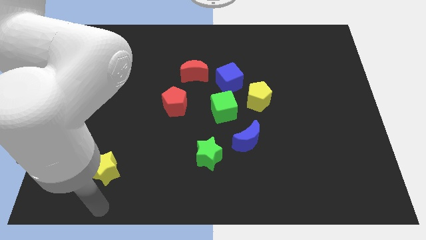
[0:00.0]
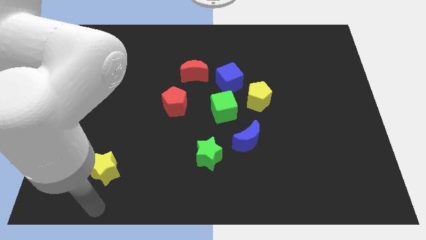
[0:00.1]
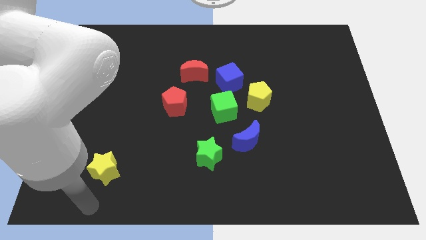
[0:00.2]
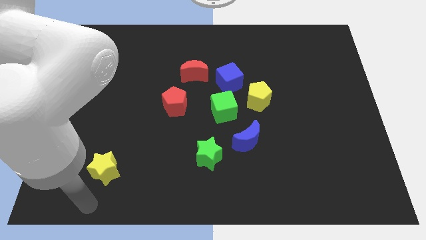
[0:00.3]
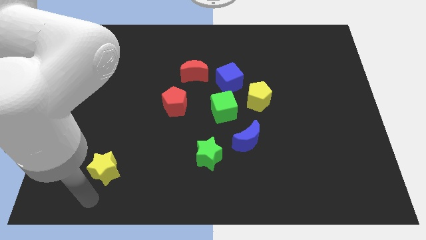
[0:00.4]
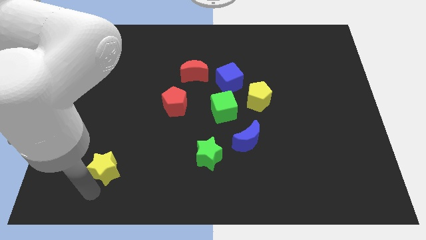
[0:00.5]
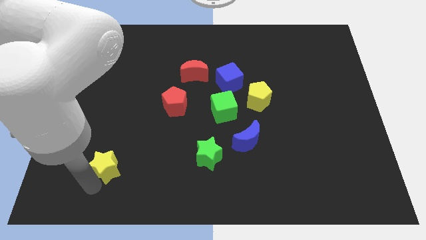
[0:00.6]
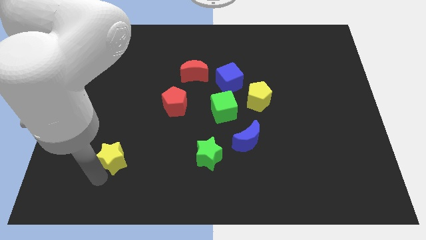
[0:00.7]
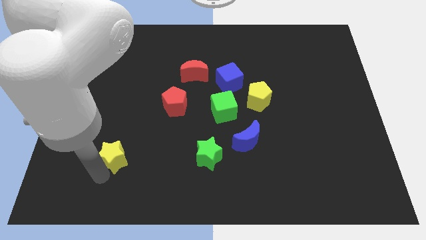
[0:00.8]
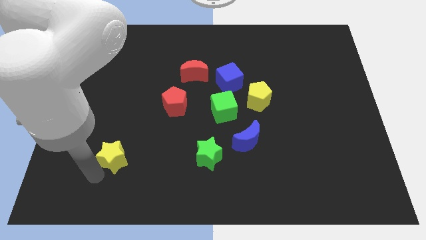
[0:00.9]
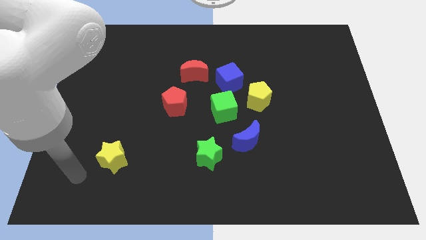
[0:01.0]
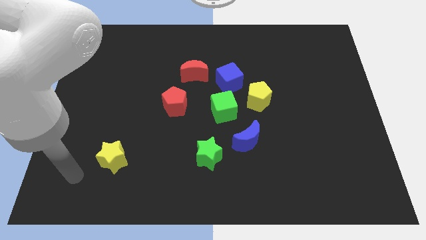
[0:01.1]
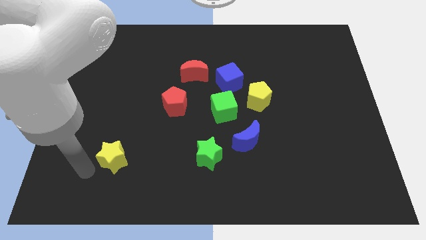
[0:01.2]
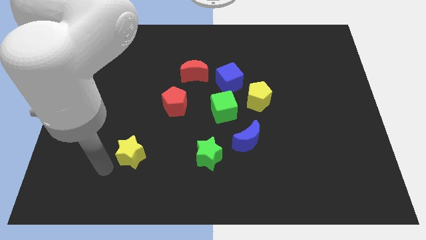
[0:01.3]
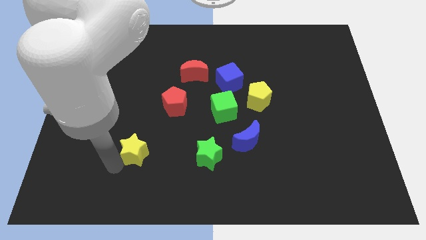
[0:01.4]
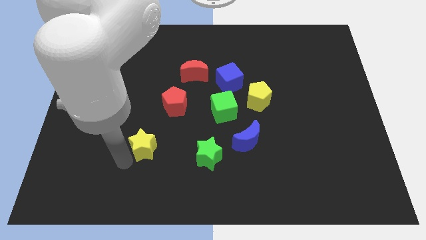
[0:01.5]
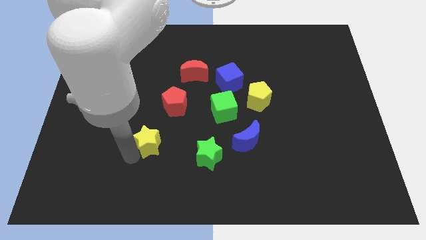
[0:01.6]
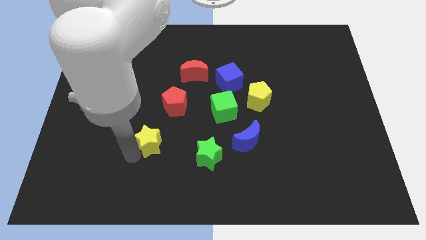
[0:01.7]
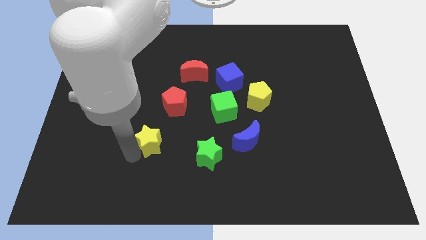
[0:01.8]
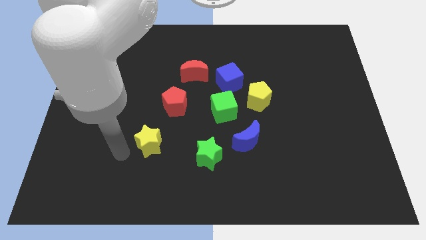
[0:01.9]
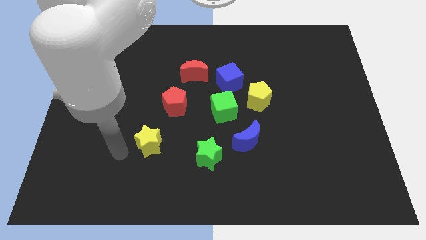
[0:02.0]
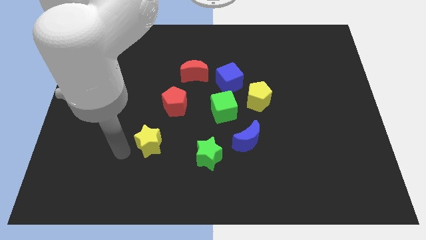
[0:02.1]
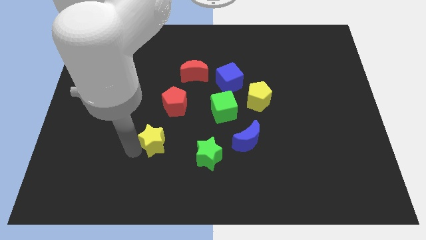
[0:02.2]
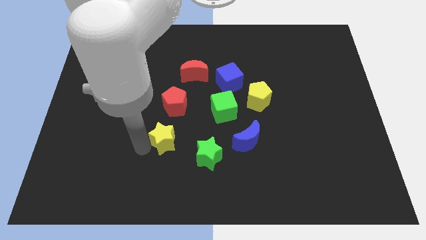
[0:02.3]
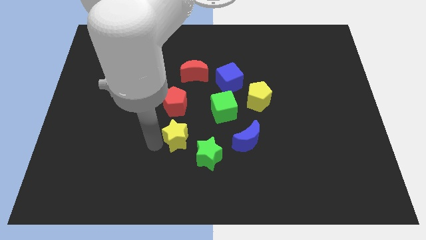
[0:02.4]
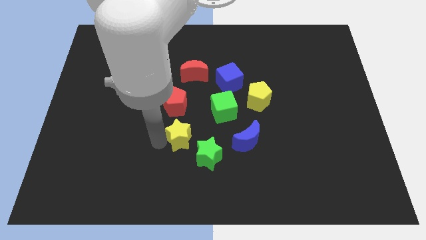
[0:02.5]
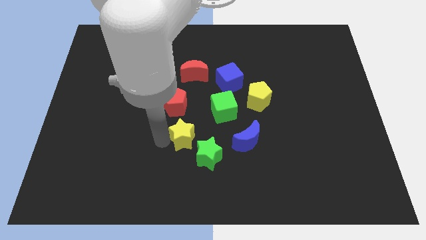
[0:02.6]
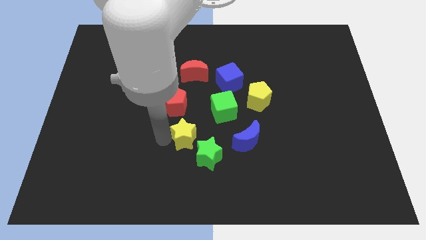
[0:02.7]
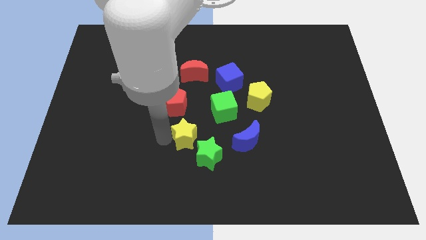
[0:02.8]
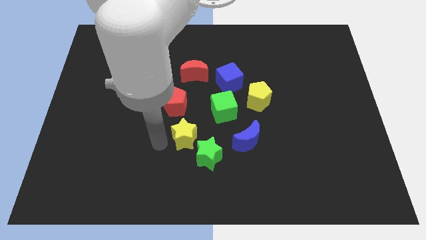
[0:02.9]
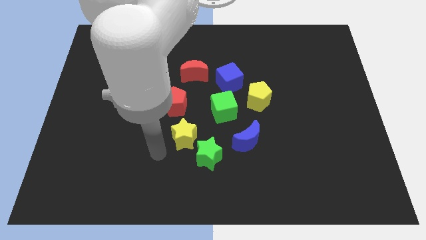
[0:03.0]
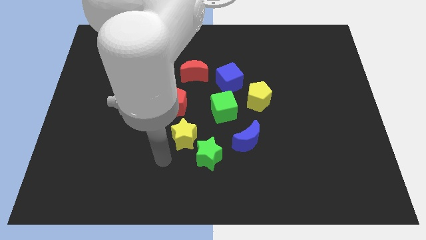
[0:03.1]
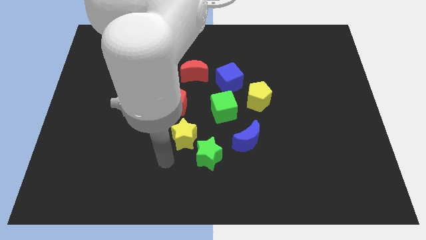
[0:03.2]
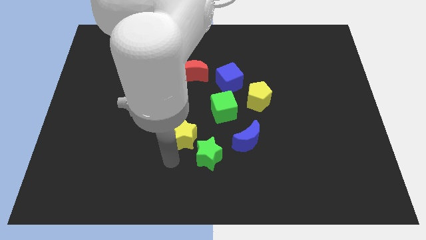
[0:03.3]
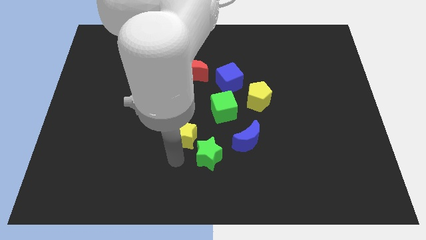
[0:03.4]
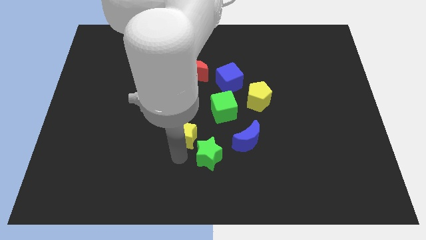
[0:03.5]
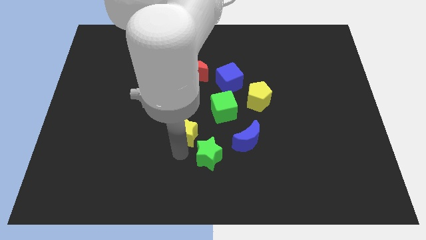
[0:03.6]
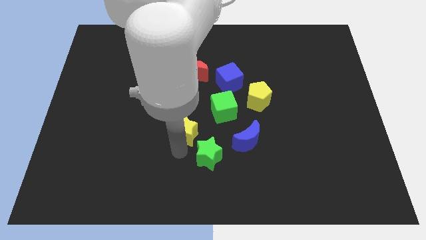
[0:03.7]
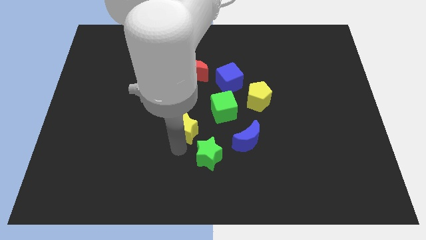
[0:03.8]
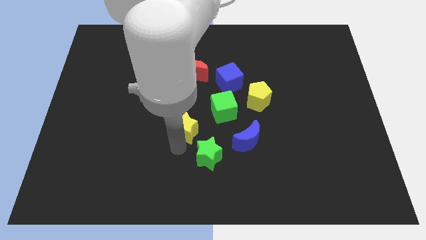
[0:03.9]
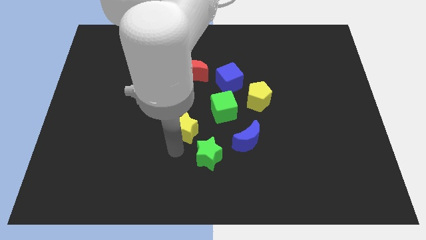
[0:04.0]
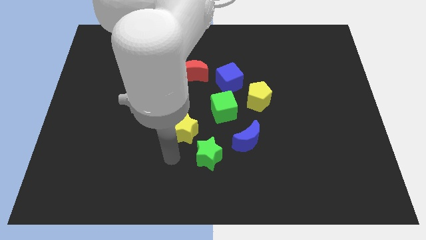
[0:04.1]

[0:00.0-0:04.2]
place the yellow star below the red pentagon

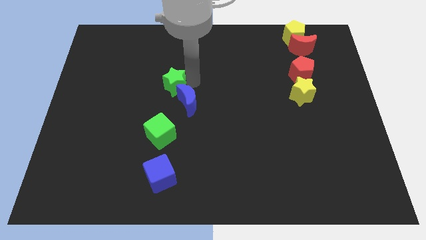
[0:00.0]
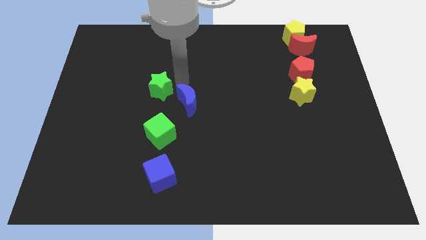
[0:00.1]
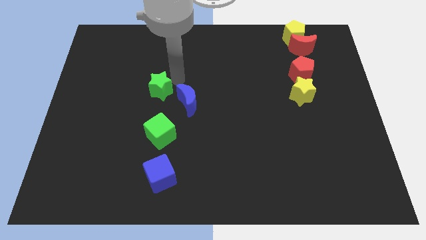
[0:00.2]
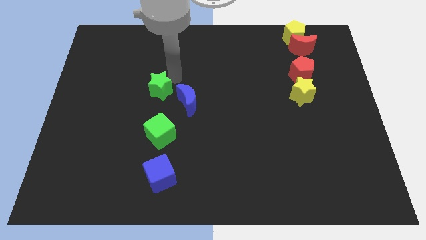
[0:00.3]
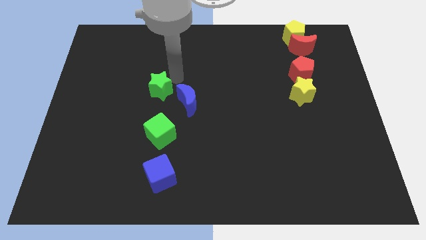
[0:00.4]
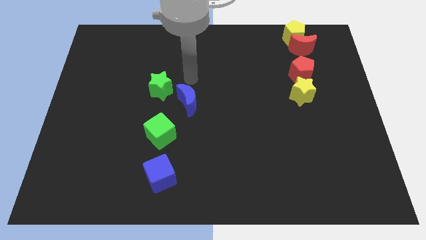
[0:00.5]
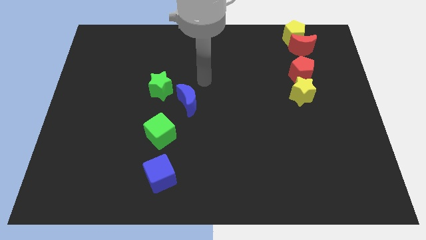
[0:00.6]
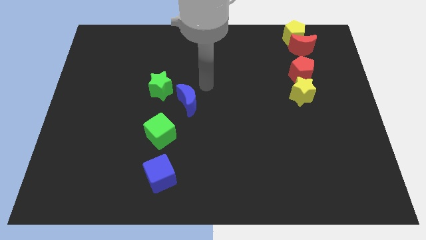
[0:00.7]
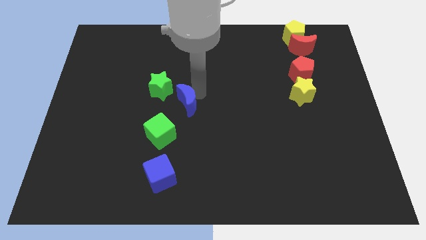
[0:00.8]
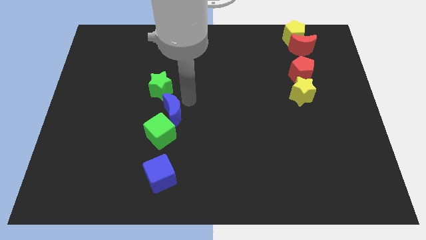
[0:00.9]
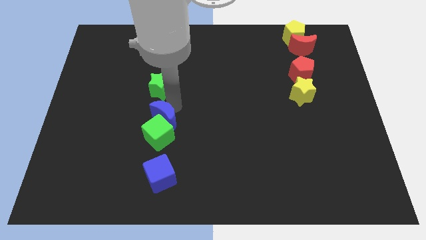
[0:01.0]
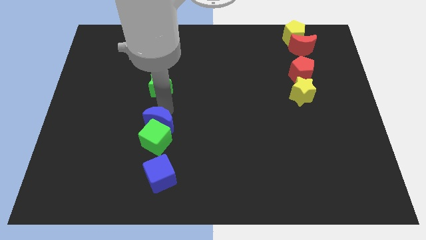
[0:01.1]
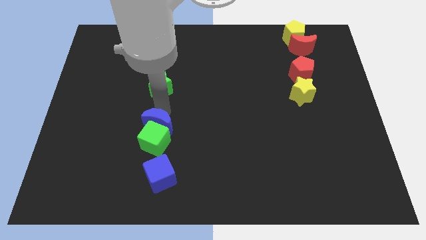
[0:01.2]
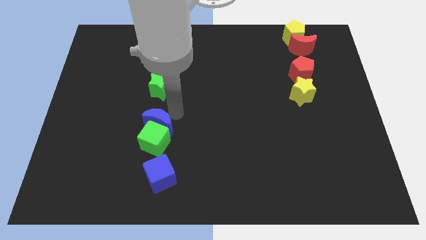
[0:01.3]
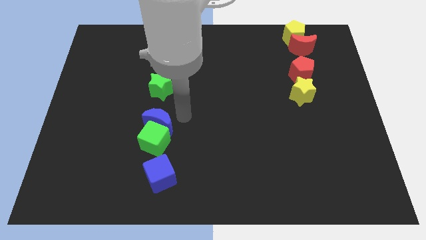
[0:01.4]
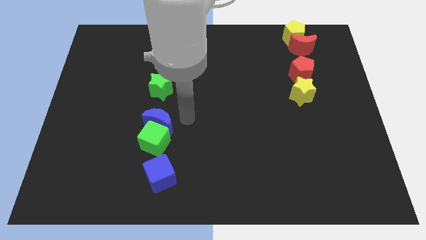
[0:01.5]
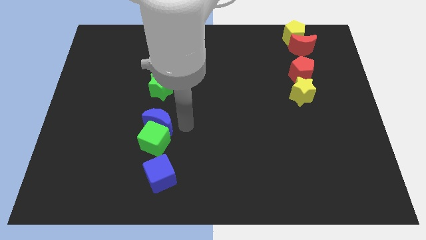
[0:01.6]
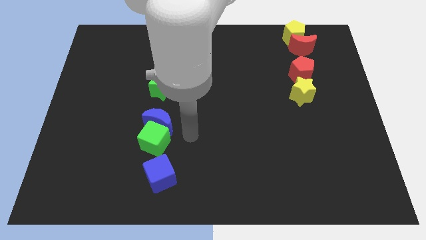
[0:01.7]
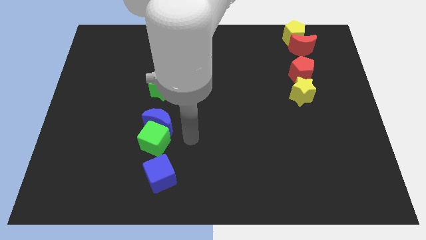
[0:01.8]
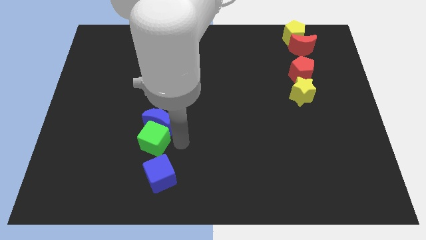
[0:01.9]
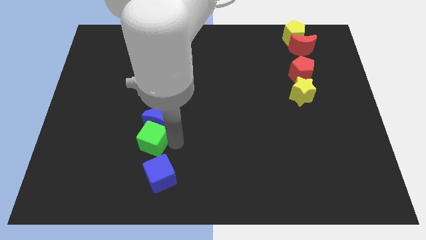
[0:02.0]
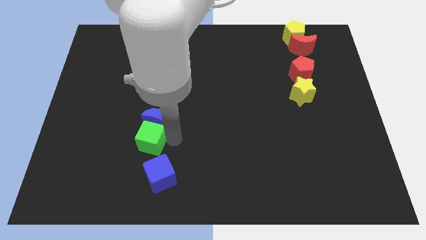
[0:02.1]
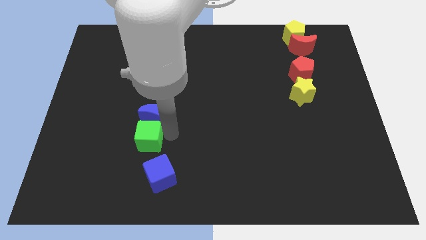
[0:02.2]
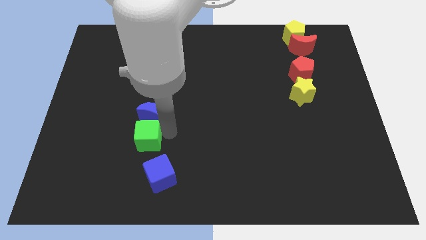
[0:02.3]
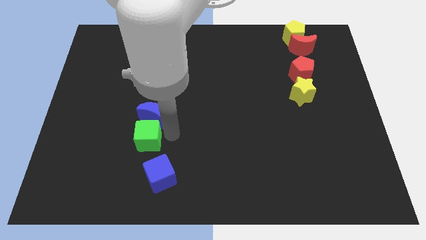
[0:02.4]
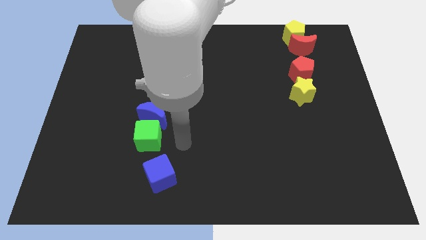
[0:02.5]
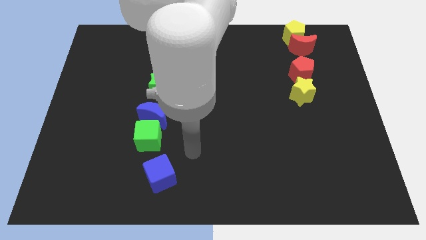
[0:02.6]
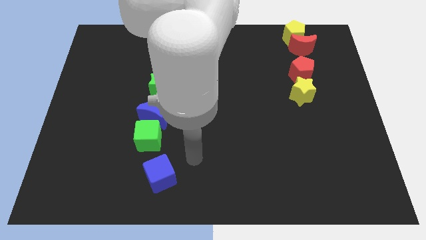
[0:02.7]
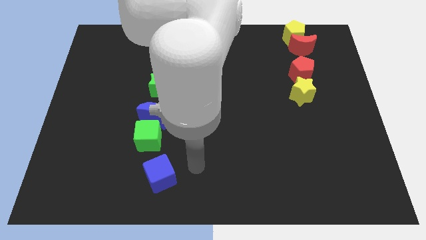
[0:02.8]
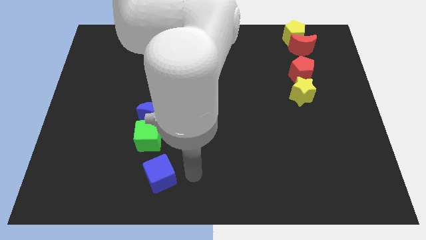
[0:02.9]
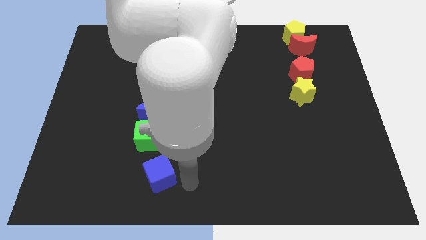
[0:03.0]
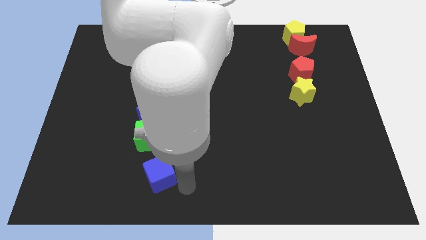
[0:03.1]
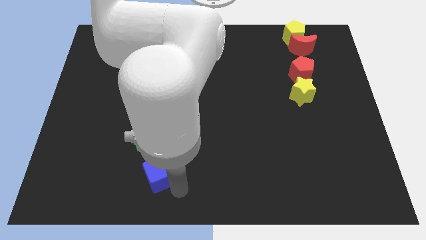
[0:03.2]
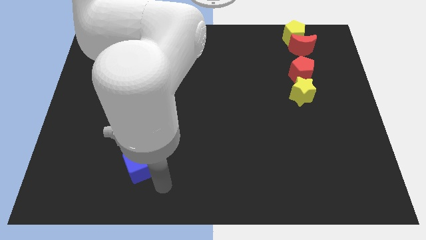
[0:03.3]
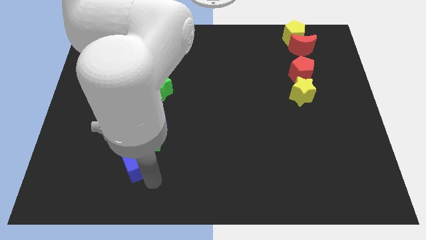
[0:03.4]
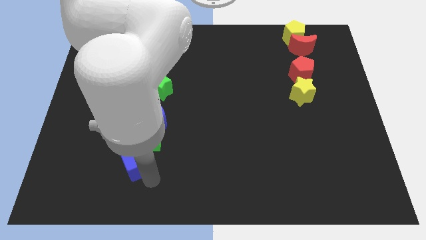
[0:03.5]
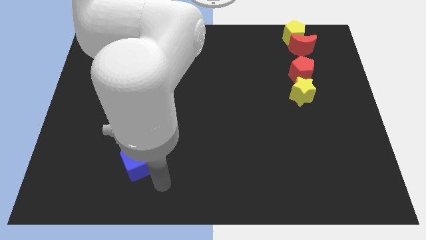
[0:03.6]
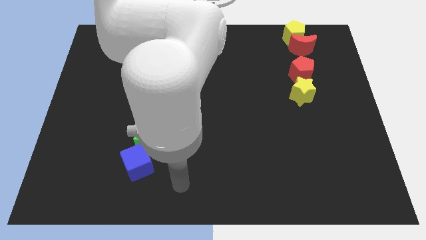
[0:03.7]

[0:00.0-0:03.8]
drag the blue blocks and green blocks towards left side

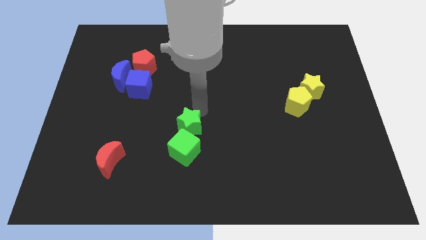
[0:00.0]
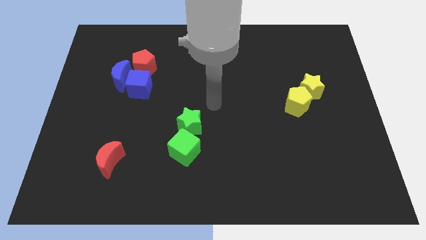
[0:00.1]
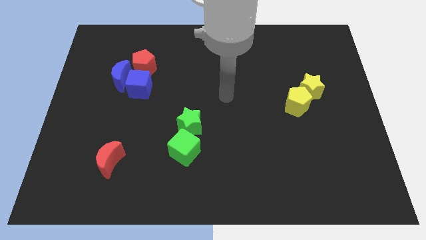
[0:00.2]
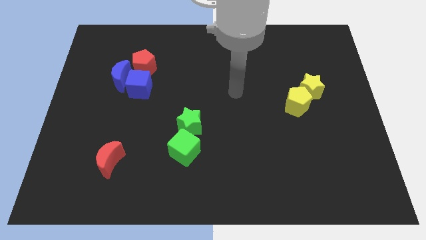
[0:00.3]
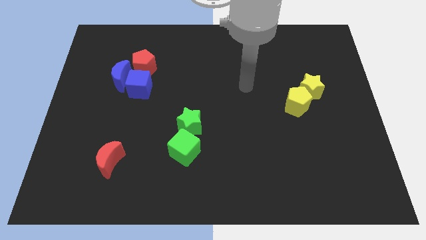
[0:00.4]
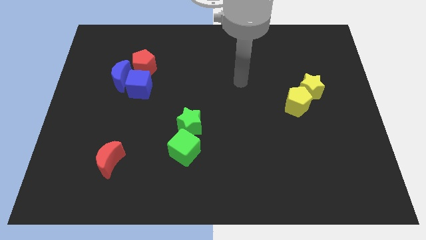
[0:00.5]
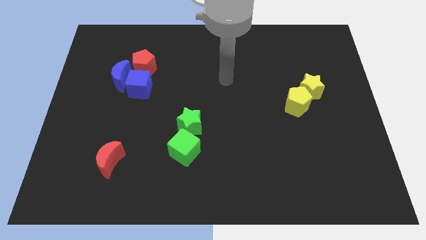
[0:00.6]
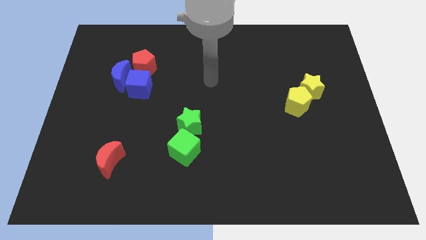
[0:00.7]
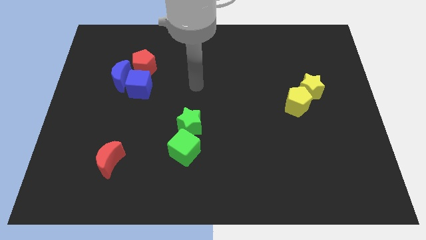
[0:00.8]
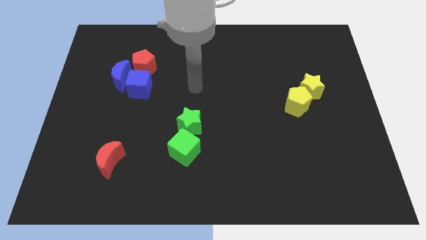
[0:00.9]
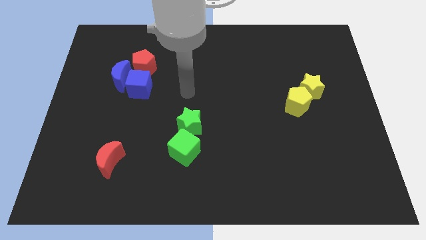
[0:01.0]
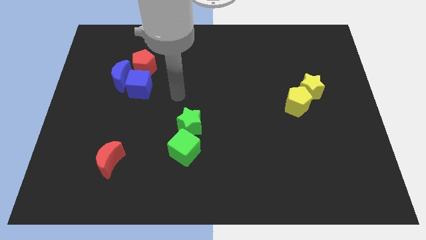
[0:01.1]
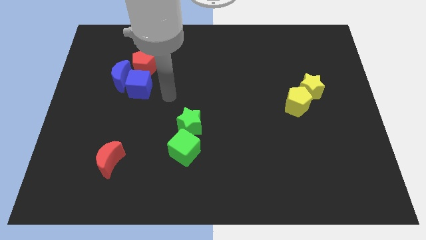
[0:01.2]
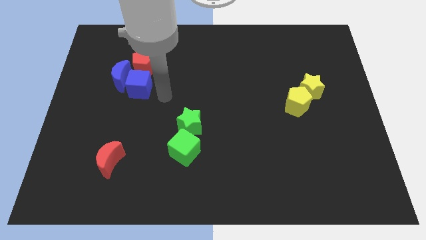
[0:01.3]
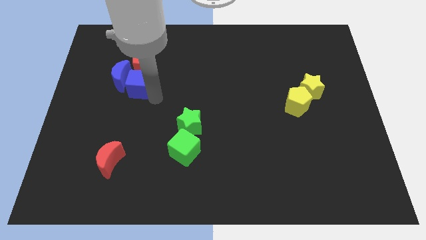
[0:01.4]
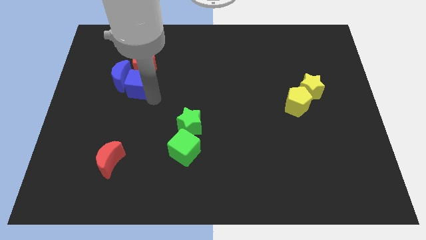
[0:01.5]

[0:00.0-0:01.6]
move your arm towards the bottom right of the blue cube
